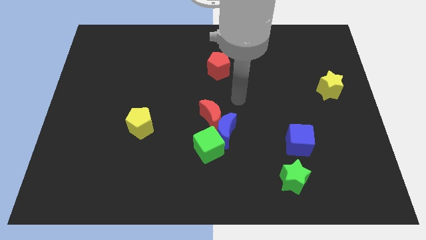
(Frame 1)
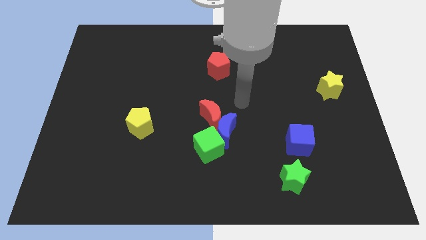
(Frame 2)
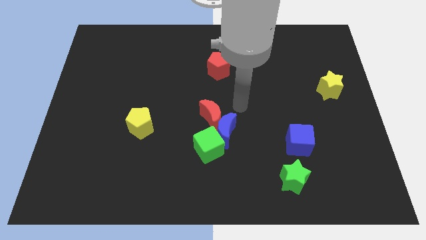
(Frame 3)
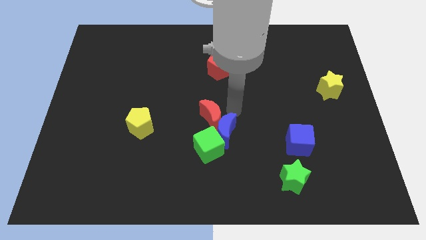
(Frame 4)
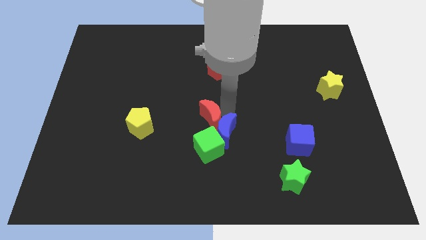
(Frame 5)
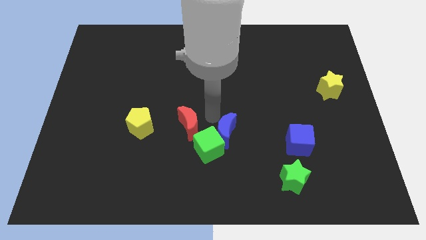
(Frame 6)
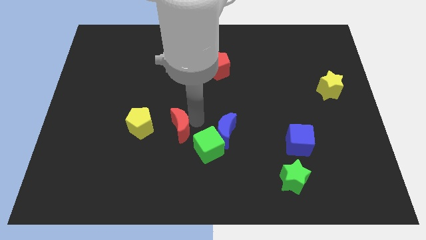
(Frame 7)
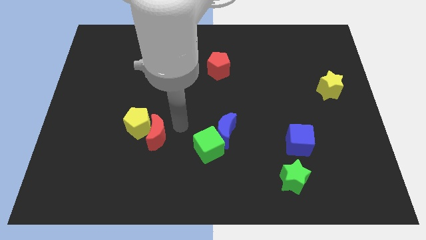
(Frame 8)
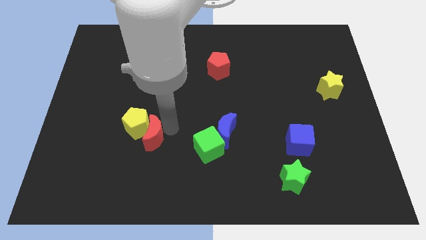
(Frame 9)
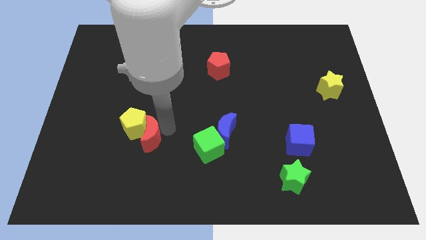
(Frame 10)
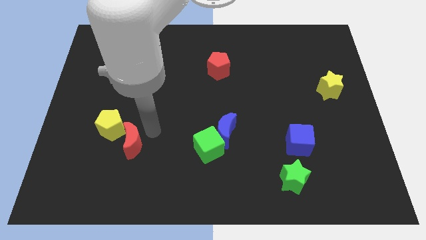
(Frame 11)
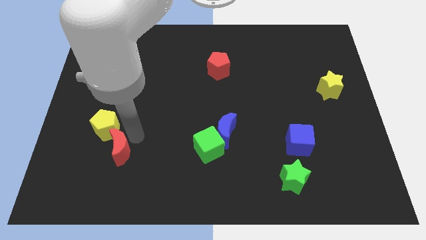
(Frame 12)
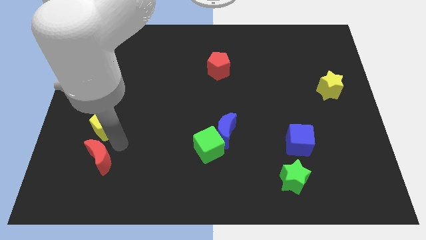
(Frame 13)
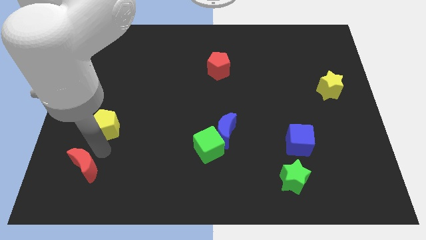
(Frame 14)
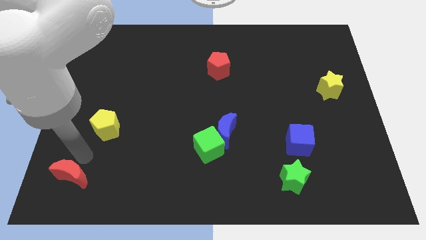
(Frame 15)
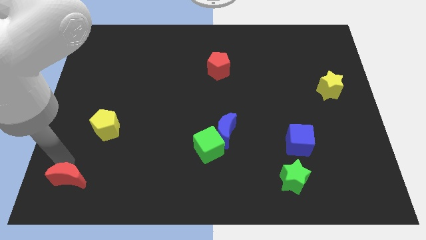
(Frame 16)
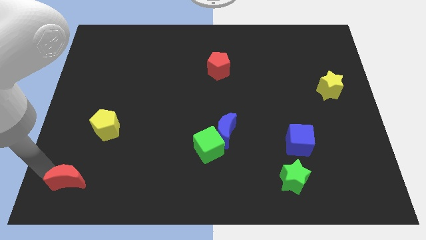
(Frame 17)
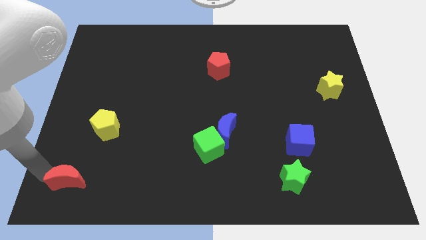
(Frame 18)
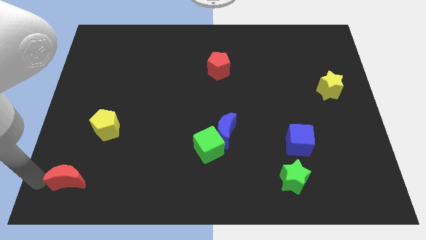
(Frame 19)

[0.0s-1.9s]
separate the red moon from the blue moon

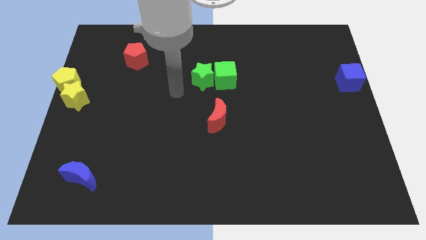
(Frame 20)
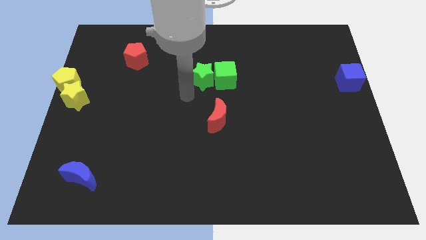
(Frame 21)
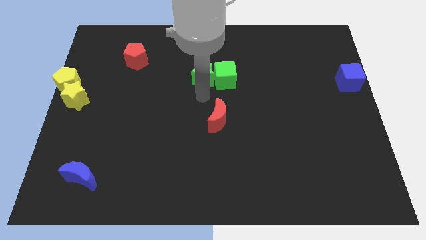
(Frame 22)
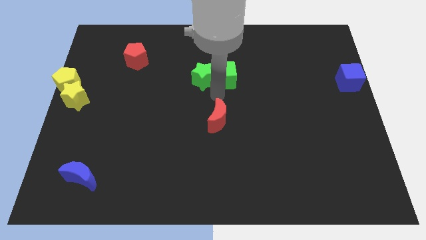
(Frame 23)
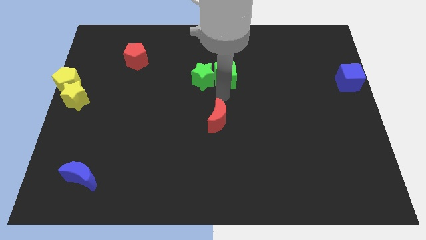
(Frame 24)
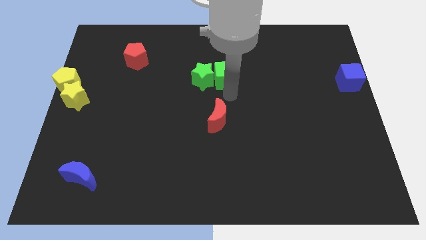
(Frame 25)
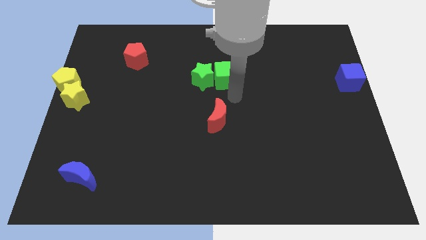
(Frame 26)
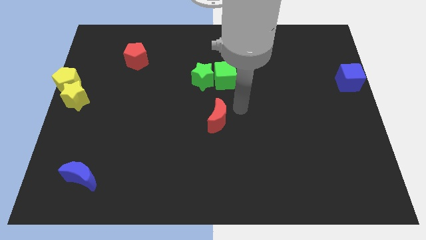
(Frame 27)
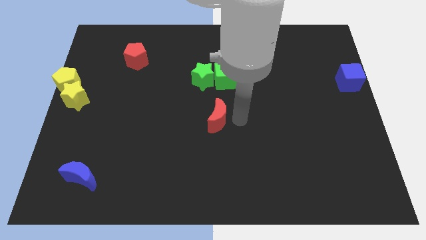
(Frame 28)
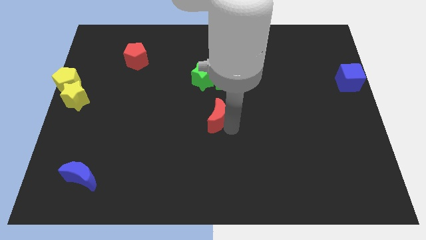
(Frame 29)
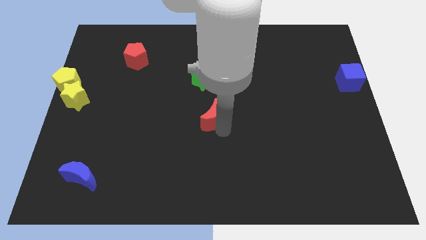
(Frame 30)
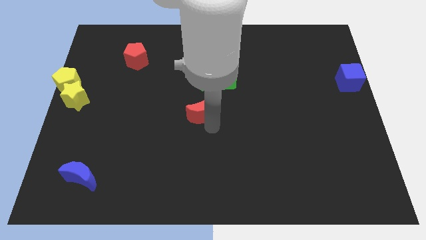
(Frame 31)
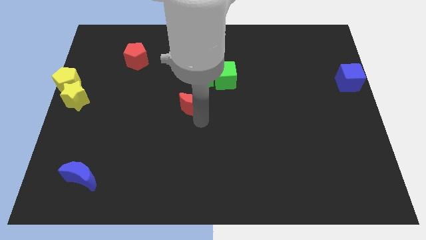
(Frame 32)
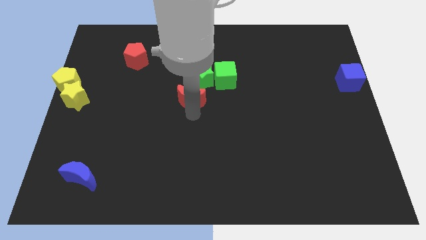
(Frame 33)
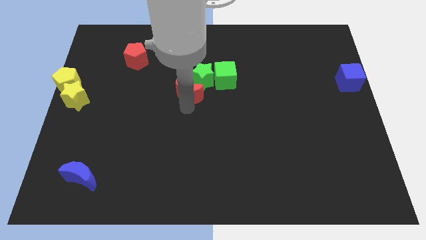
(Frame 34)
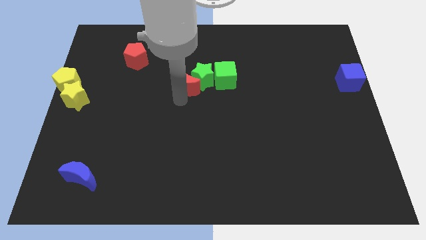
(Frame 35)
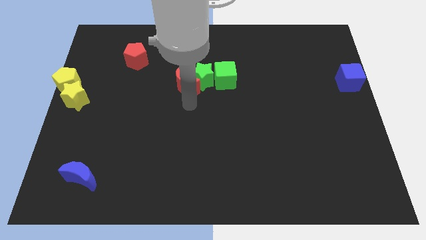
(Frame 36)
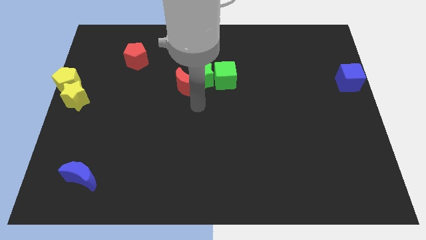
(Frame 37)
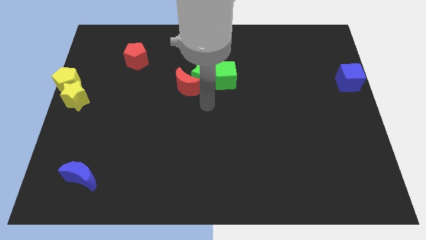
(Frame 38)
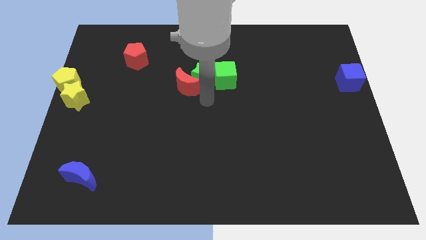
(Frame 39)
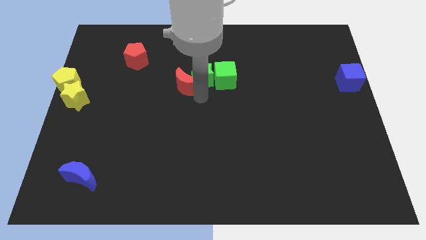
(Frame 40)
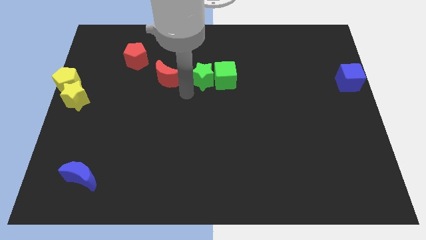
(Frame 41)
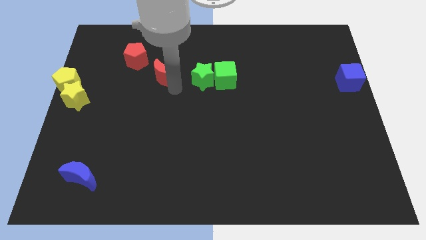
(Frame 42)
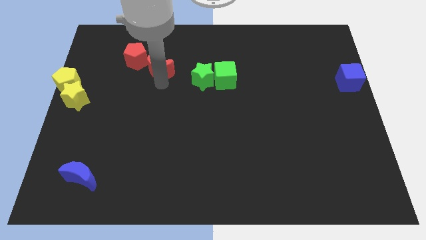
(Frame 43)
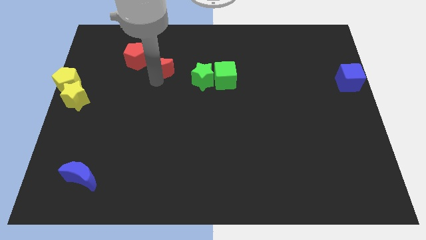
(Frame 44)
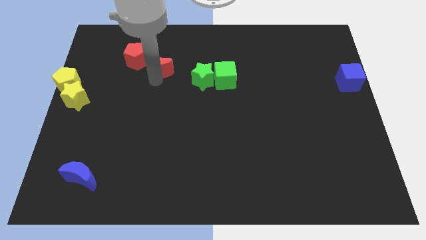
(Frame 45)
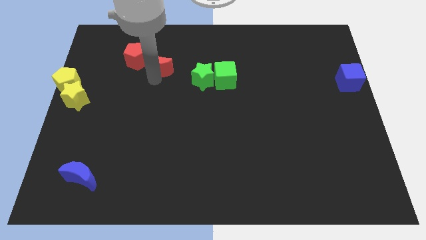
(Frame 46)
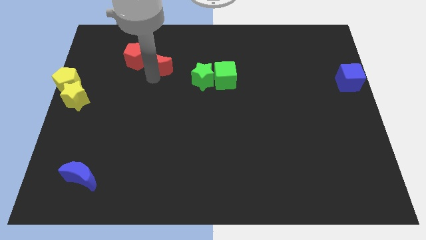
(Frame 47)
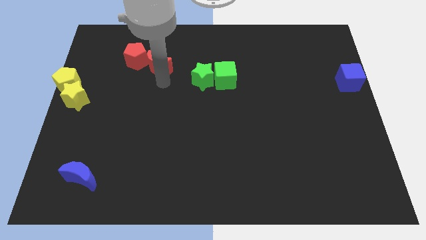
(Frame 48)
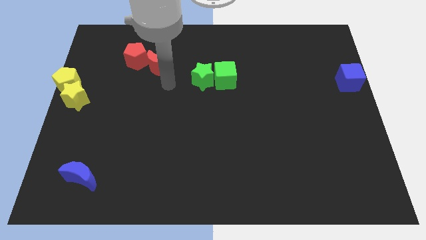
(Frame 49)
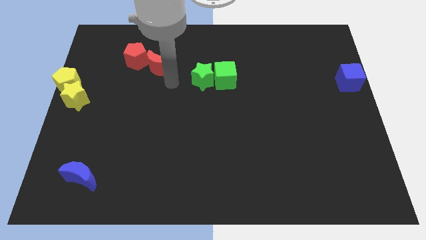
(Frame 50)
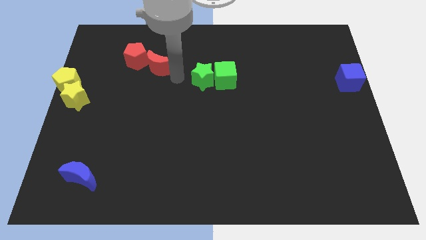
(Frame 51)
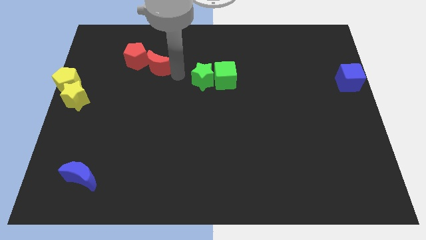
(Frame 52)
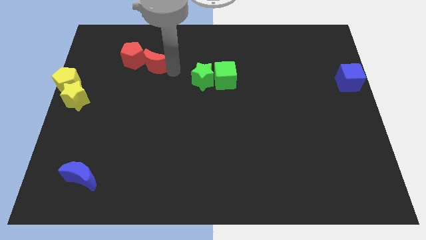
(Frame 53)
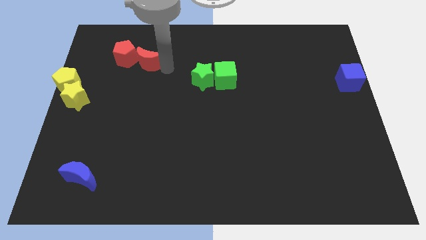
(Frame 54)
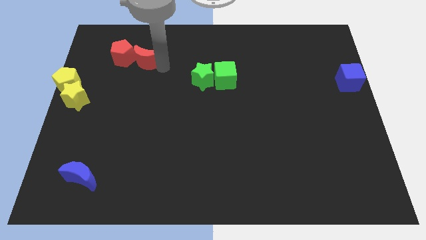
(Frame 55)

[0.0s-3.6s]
slide the red crescent to the right side of the red pentagon

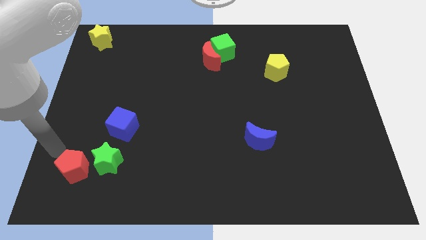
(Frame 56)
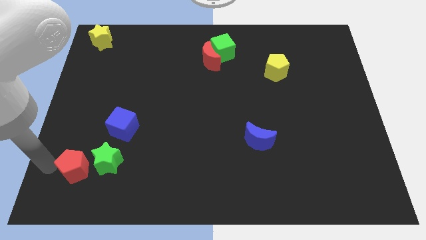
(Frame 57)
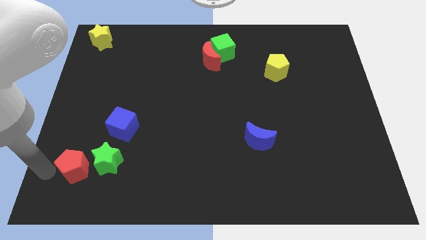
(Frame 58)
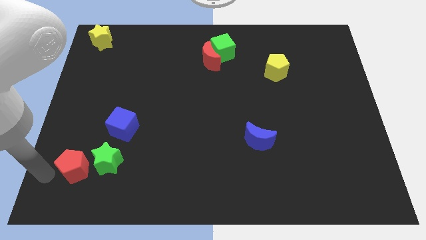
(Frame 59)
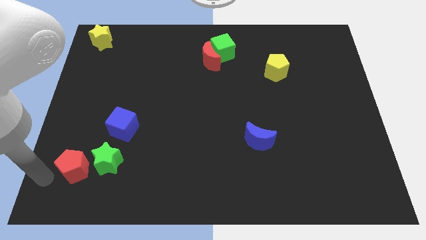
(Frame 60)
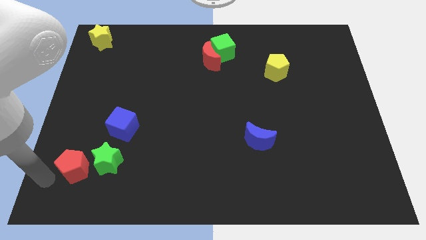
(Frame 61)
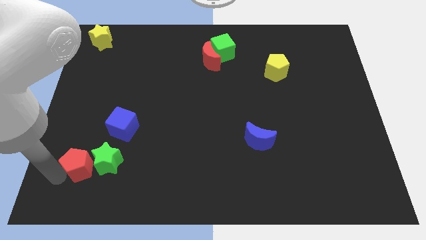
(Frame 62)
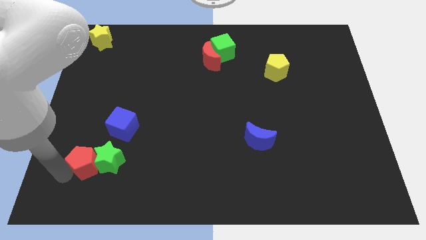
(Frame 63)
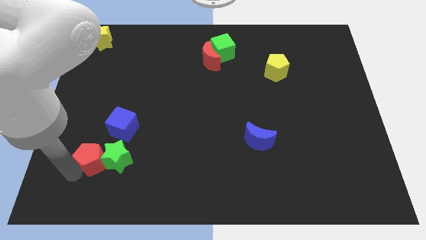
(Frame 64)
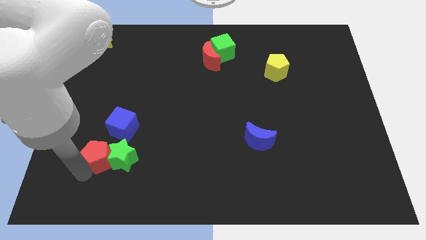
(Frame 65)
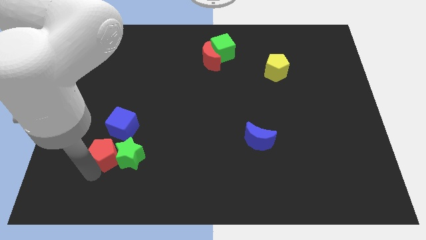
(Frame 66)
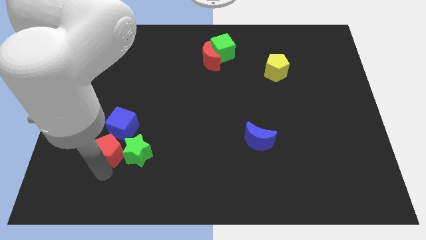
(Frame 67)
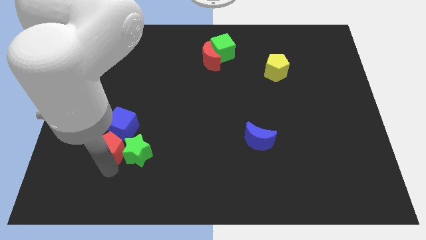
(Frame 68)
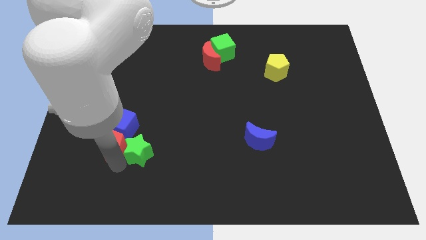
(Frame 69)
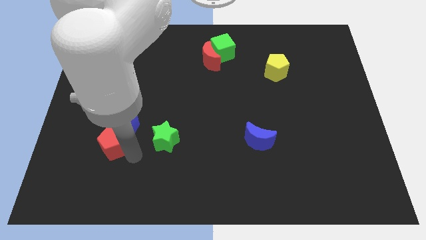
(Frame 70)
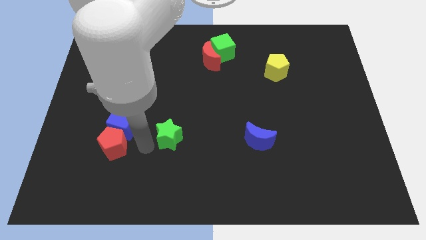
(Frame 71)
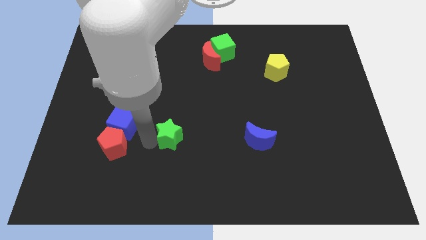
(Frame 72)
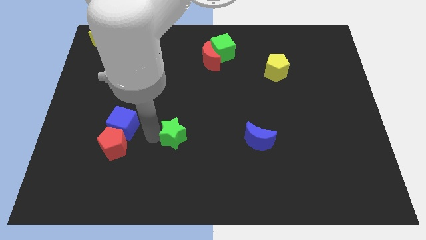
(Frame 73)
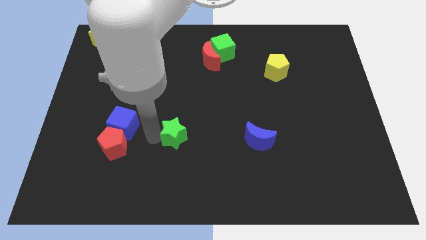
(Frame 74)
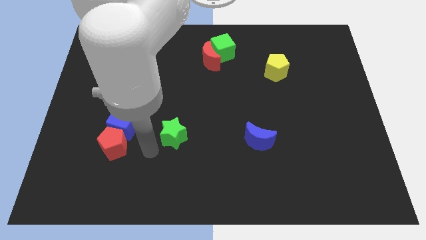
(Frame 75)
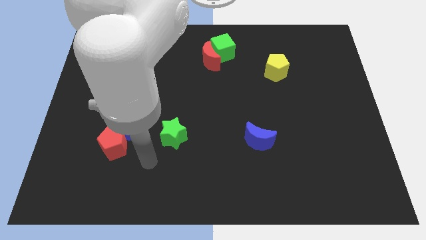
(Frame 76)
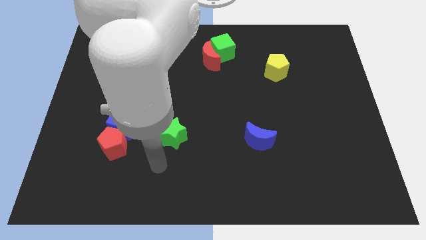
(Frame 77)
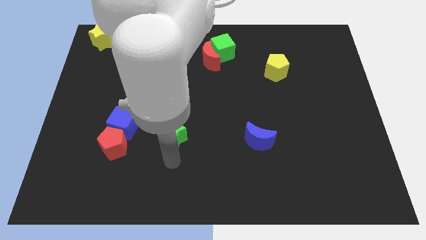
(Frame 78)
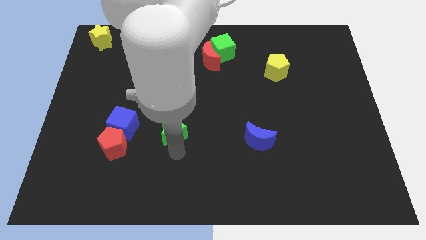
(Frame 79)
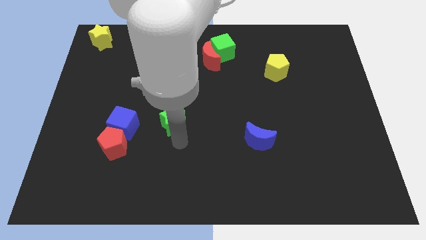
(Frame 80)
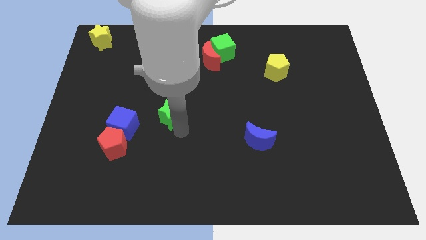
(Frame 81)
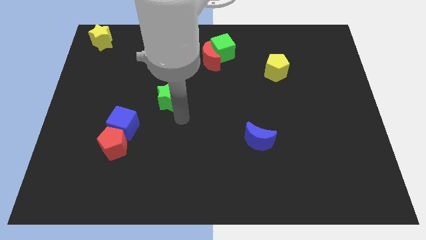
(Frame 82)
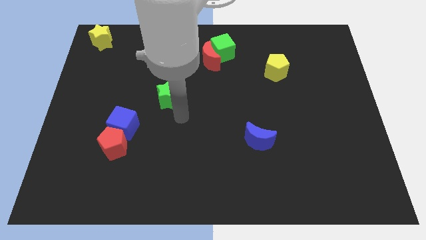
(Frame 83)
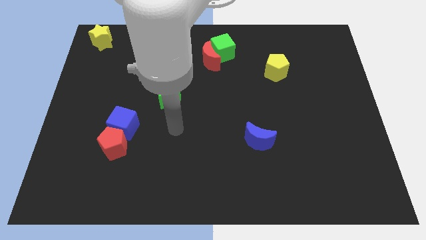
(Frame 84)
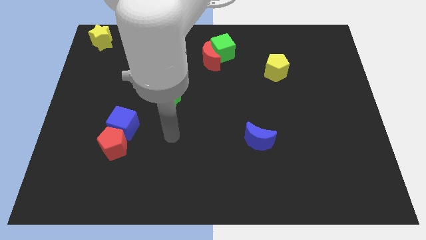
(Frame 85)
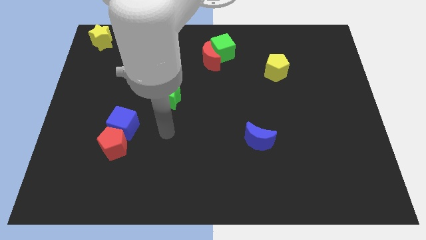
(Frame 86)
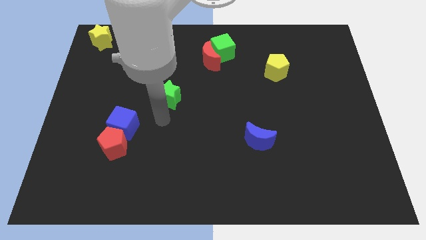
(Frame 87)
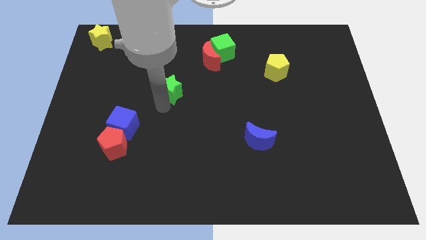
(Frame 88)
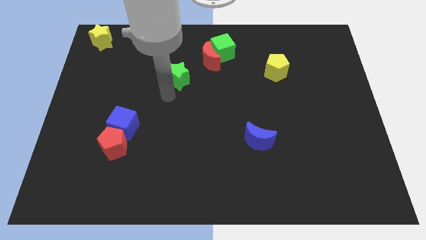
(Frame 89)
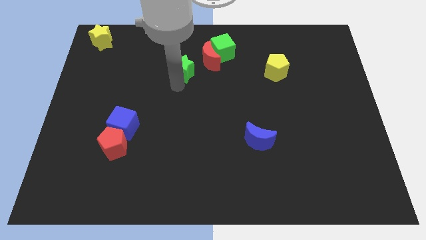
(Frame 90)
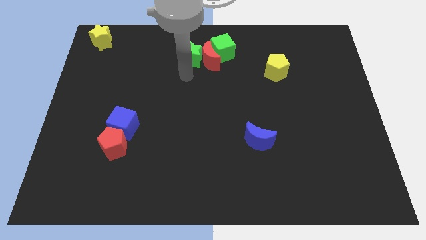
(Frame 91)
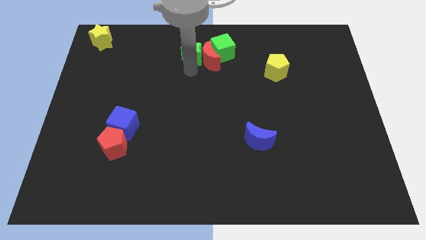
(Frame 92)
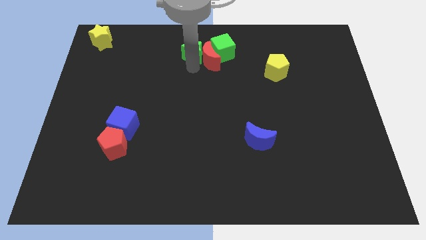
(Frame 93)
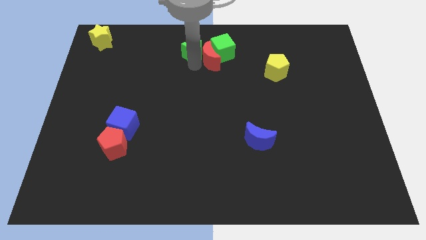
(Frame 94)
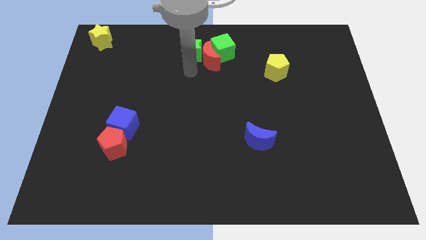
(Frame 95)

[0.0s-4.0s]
place the green star to the left of the red moon
